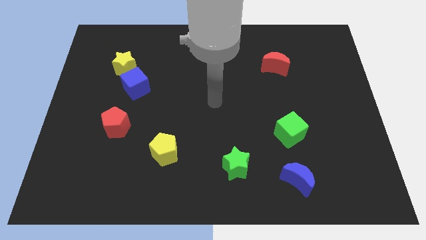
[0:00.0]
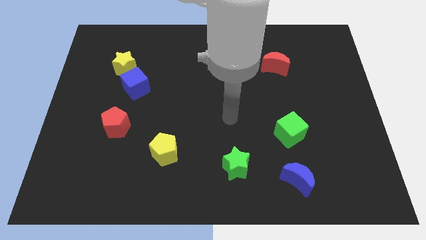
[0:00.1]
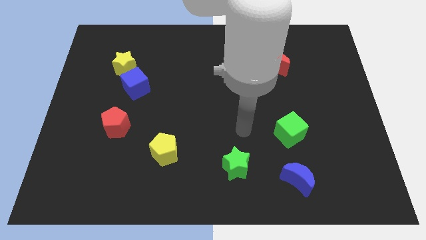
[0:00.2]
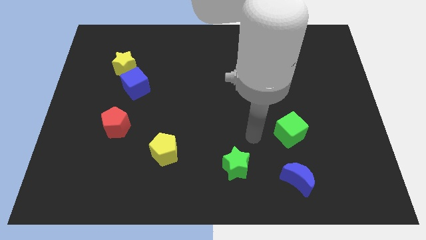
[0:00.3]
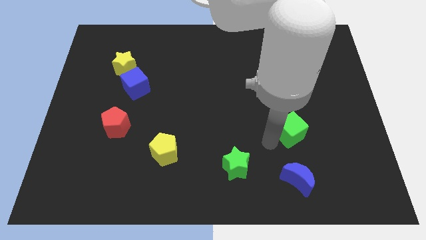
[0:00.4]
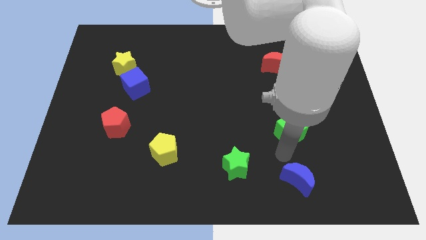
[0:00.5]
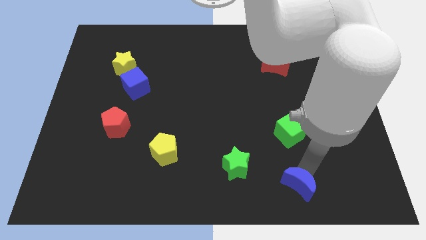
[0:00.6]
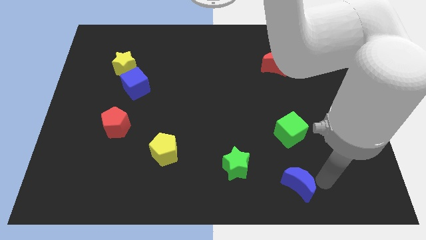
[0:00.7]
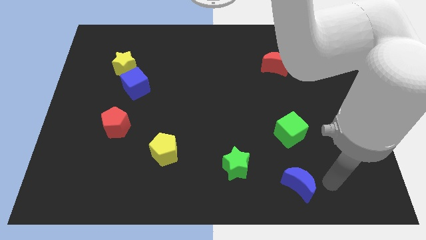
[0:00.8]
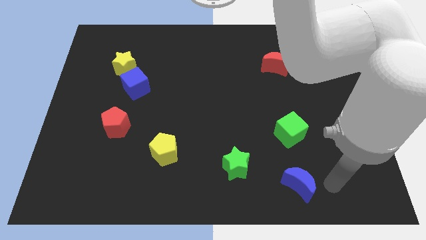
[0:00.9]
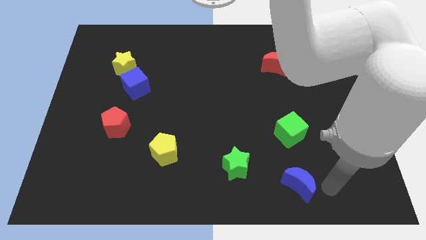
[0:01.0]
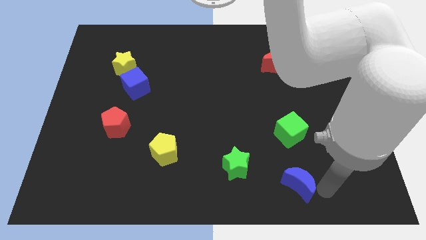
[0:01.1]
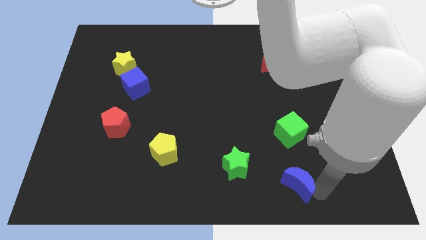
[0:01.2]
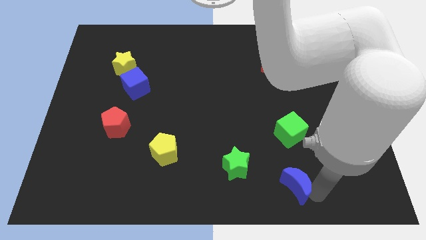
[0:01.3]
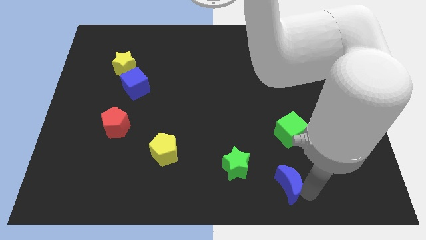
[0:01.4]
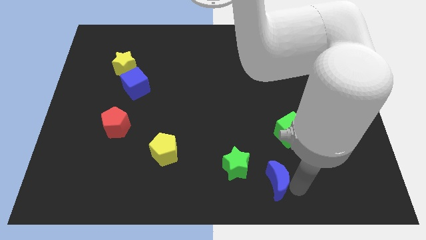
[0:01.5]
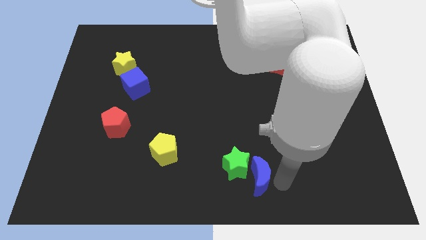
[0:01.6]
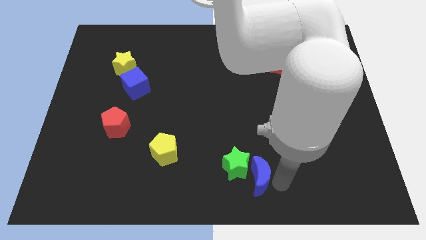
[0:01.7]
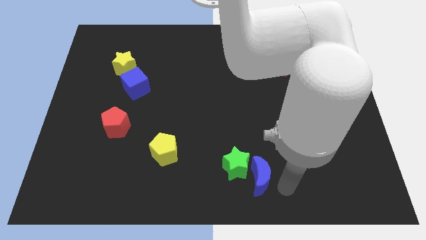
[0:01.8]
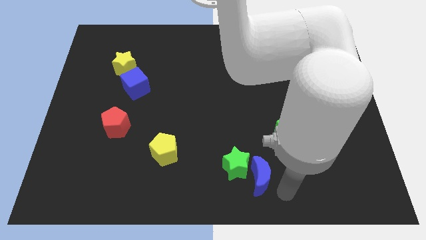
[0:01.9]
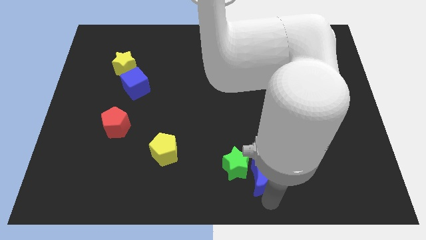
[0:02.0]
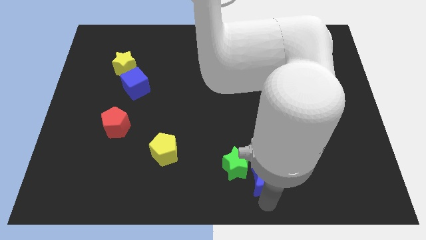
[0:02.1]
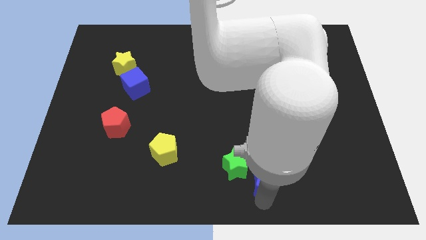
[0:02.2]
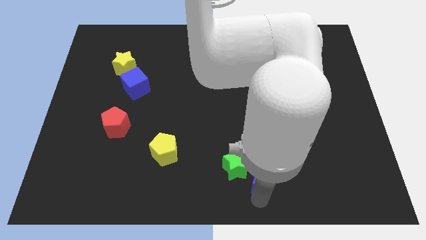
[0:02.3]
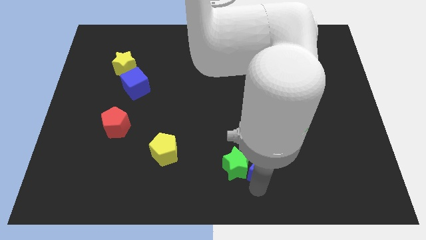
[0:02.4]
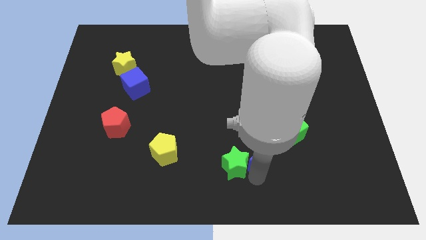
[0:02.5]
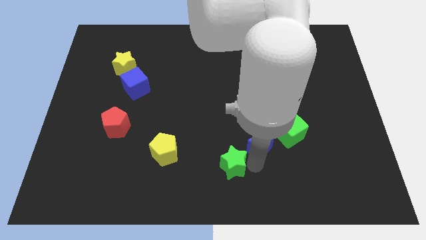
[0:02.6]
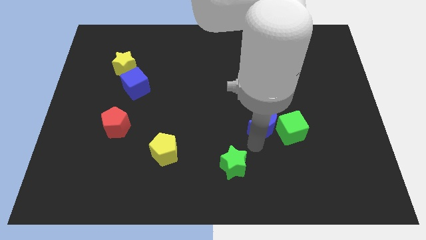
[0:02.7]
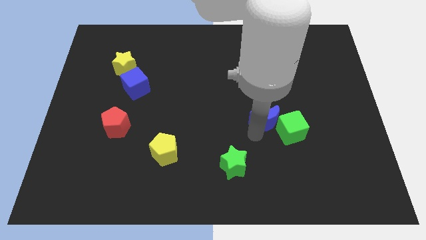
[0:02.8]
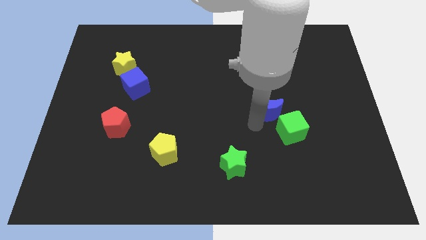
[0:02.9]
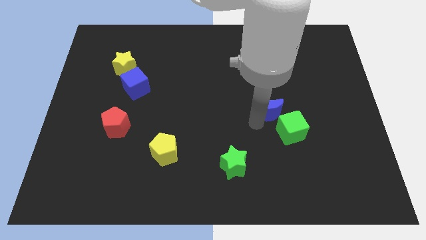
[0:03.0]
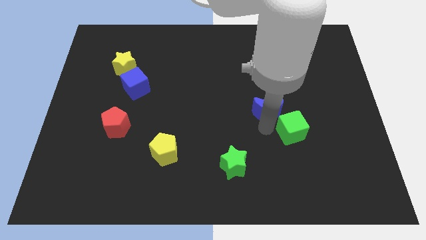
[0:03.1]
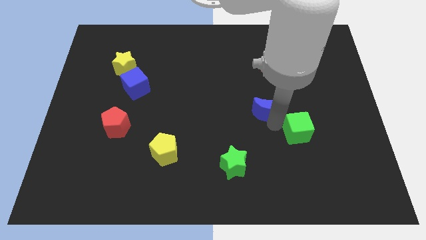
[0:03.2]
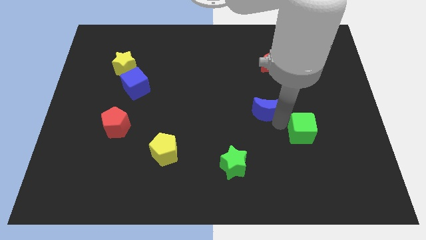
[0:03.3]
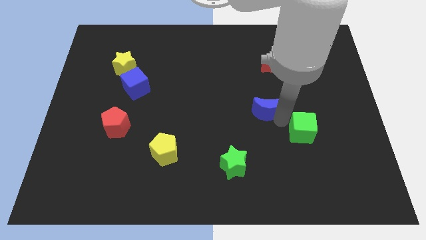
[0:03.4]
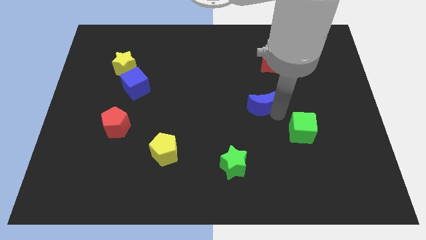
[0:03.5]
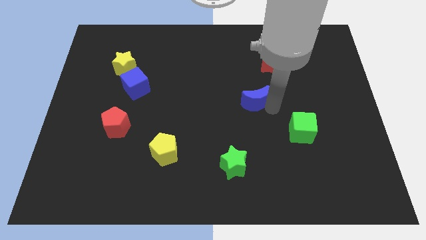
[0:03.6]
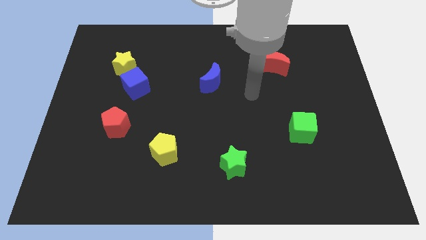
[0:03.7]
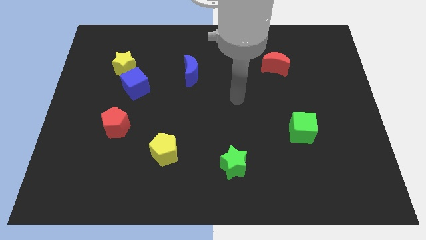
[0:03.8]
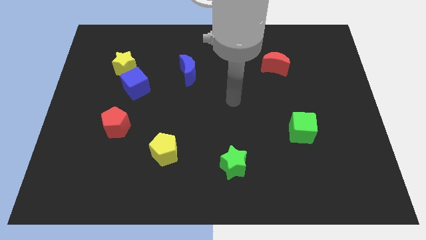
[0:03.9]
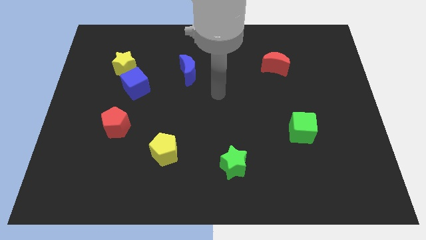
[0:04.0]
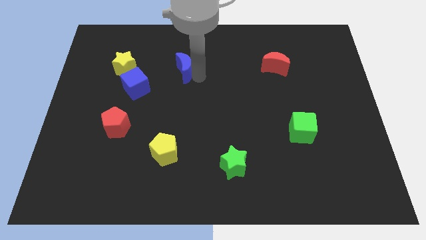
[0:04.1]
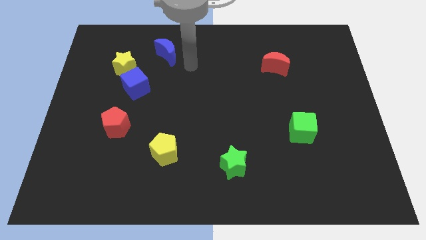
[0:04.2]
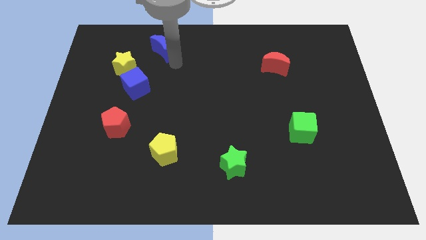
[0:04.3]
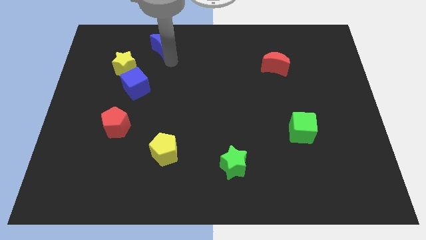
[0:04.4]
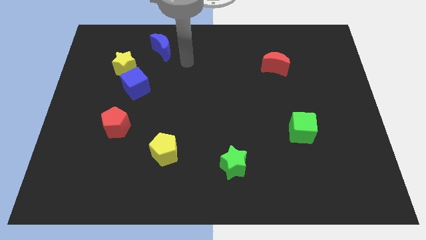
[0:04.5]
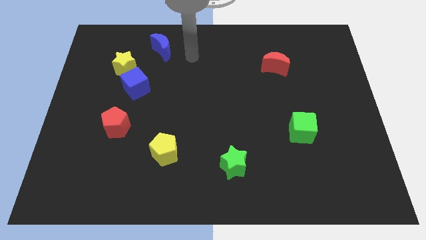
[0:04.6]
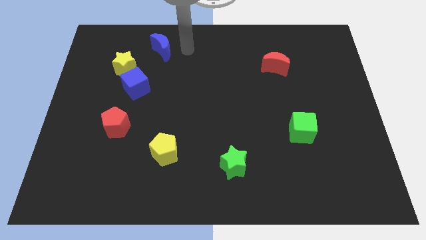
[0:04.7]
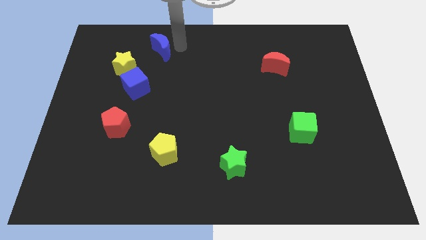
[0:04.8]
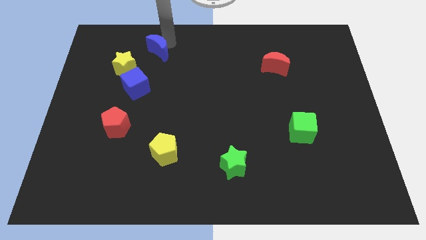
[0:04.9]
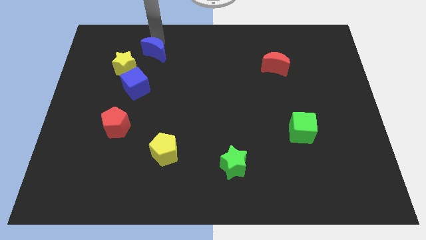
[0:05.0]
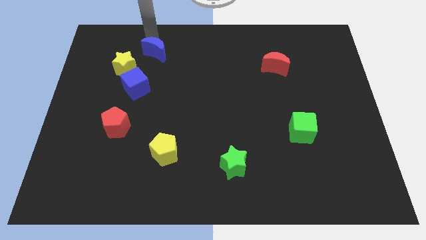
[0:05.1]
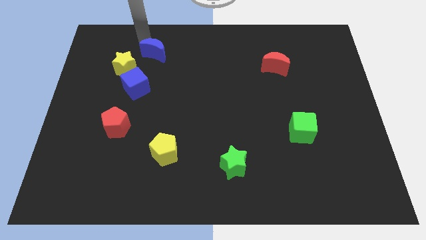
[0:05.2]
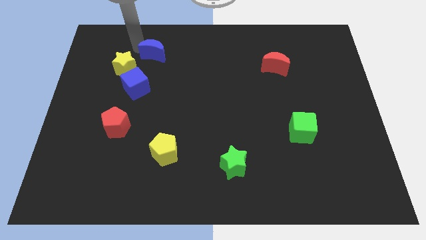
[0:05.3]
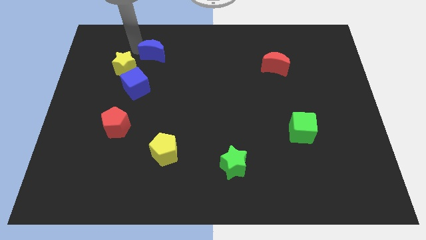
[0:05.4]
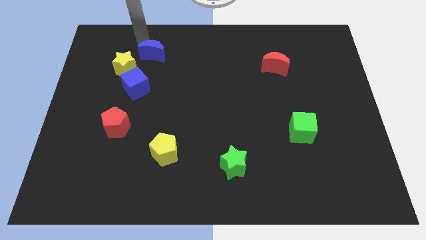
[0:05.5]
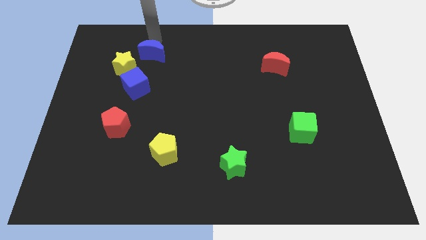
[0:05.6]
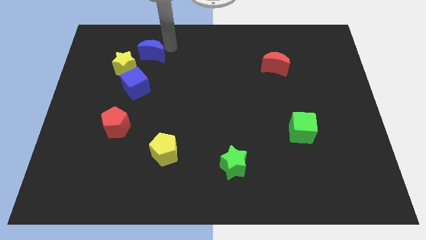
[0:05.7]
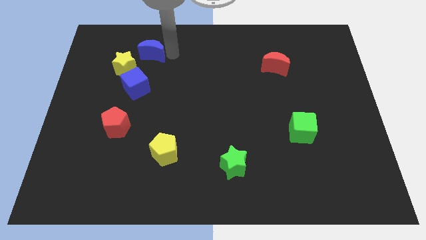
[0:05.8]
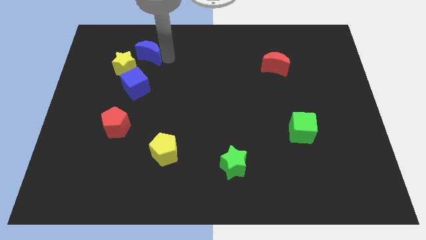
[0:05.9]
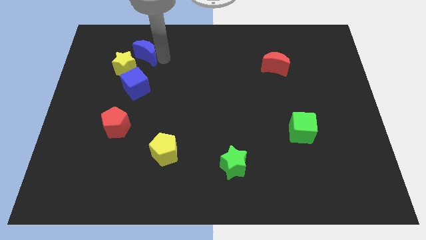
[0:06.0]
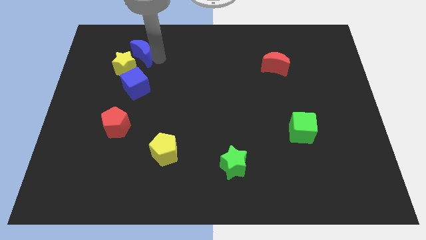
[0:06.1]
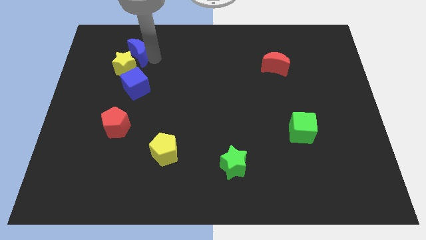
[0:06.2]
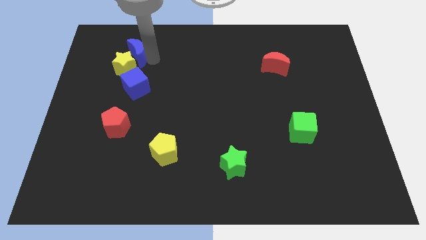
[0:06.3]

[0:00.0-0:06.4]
put the blue moon next to the yellow star

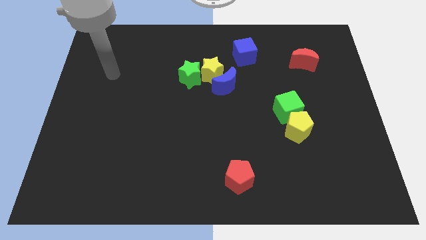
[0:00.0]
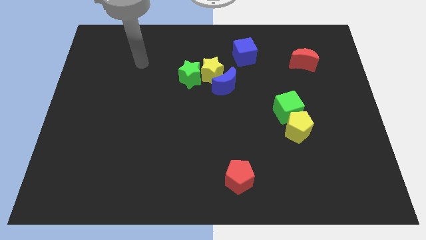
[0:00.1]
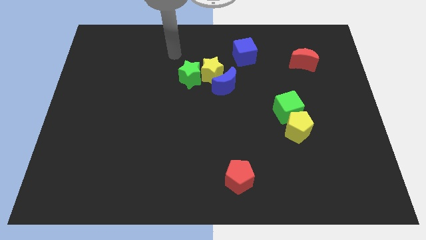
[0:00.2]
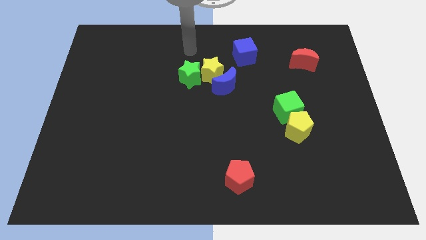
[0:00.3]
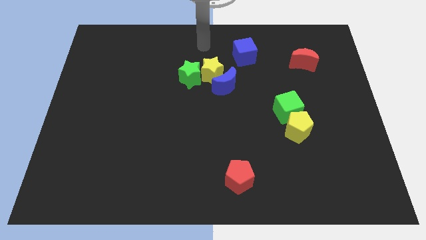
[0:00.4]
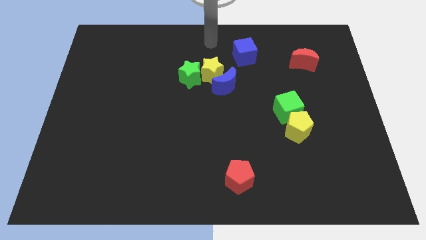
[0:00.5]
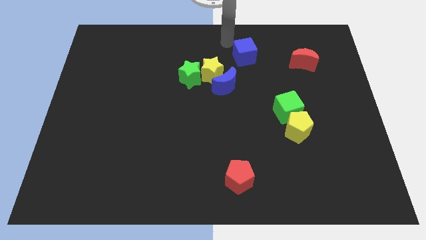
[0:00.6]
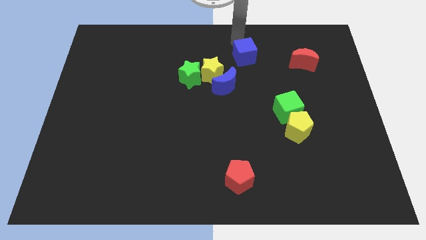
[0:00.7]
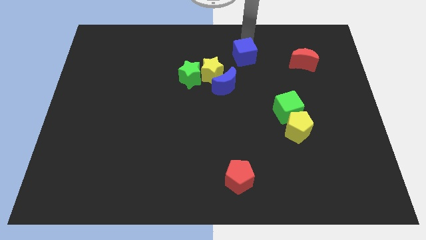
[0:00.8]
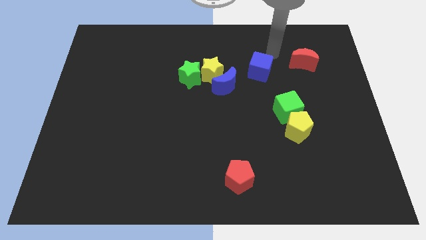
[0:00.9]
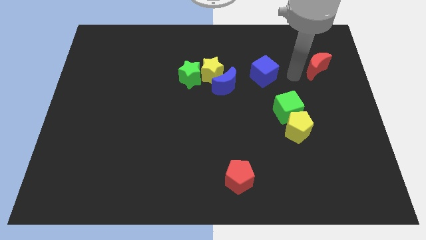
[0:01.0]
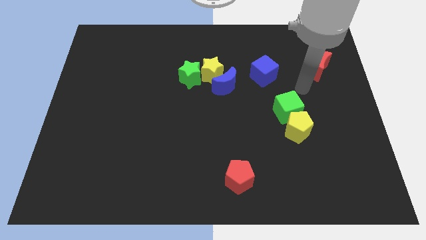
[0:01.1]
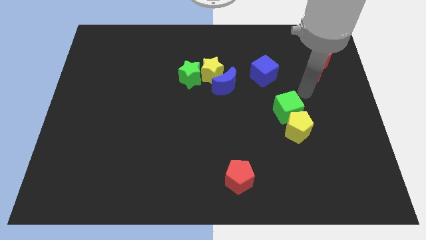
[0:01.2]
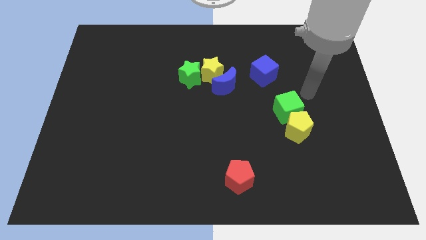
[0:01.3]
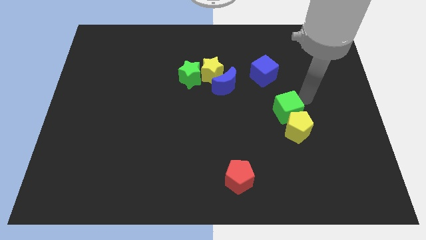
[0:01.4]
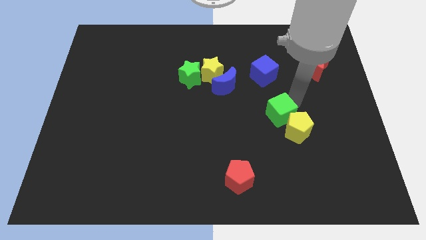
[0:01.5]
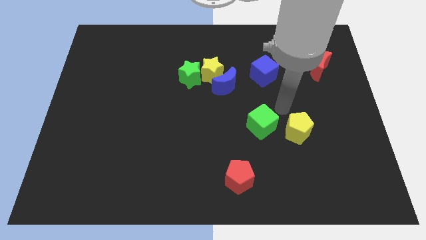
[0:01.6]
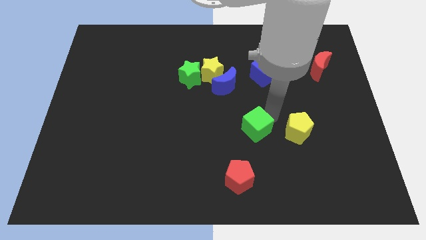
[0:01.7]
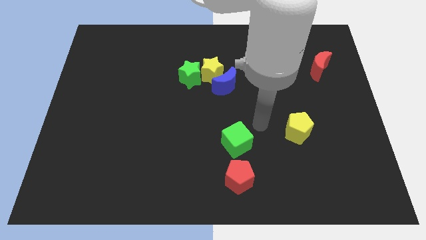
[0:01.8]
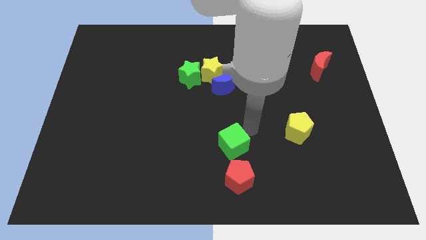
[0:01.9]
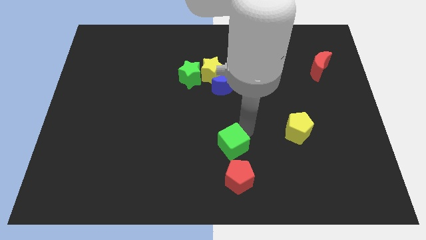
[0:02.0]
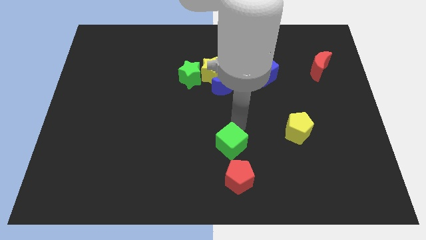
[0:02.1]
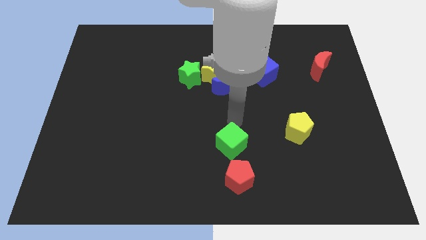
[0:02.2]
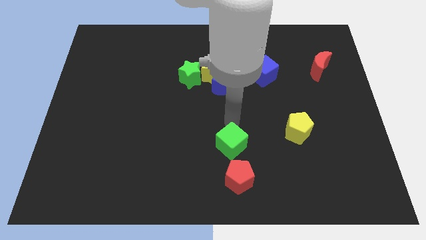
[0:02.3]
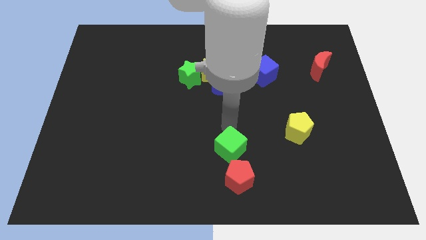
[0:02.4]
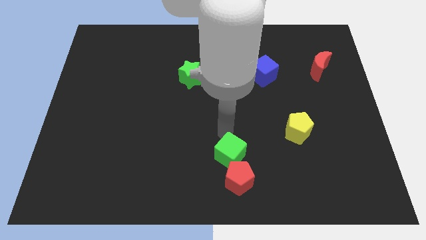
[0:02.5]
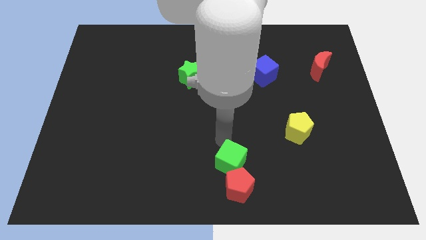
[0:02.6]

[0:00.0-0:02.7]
slide the green cube close to the red pentagon
